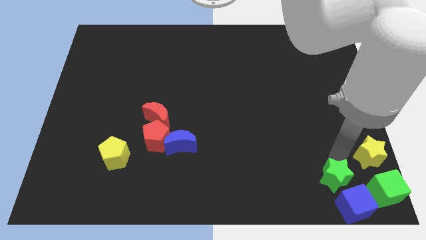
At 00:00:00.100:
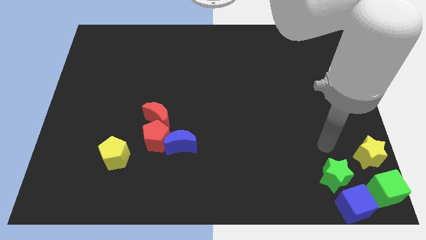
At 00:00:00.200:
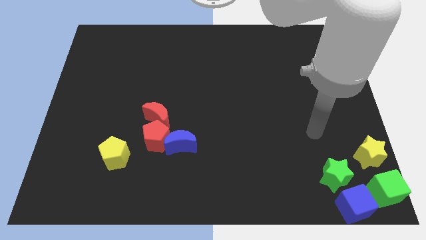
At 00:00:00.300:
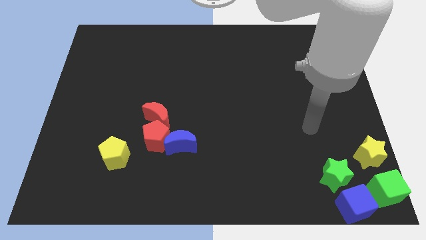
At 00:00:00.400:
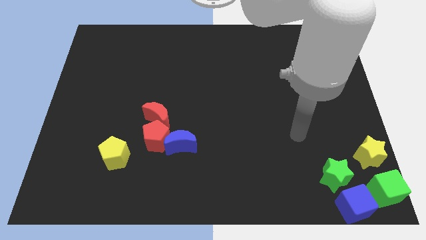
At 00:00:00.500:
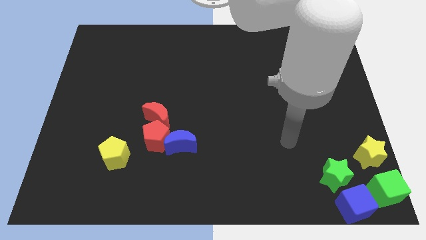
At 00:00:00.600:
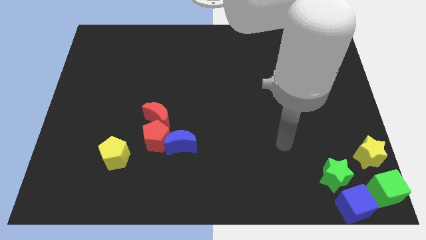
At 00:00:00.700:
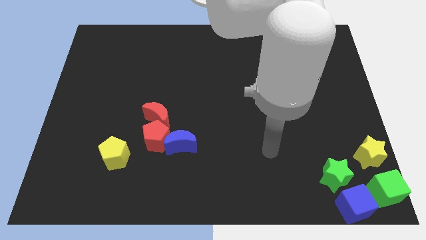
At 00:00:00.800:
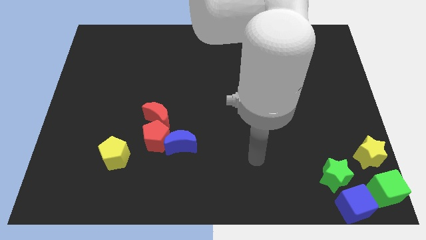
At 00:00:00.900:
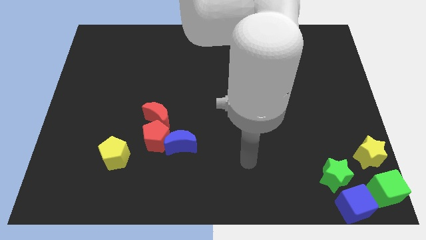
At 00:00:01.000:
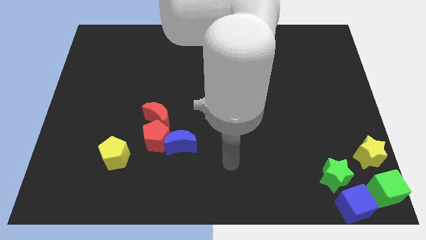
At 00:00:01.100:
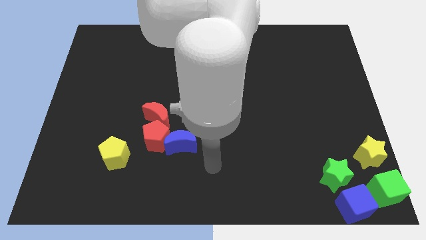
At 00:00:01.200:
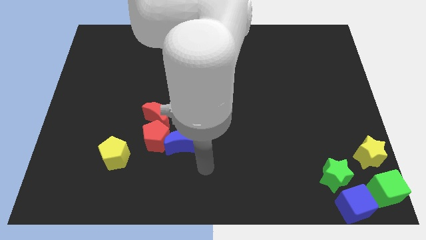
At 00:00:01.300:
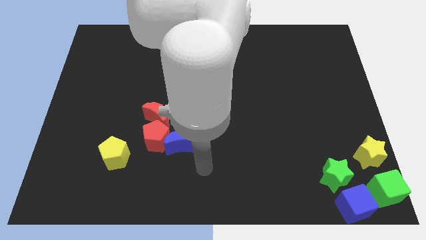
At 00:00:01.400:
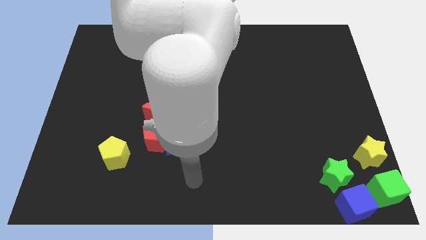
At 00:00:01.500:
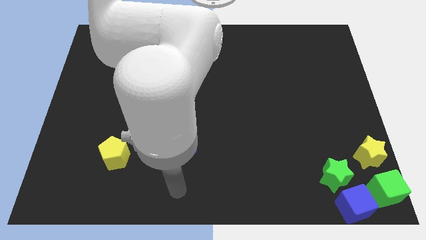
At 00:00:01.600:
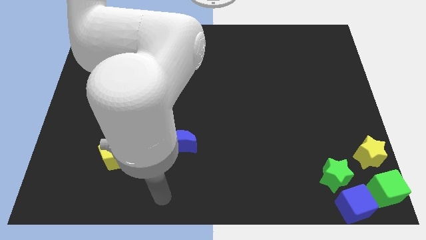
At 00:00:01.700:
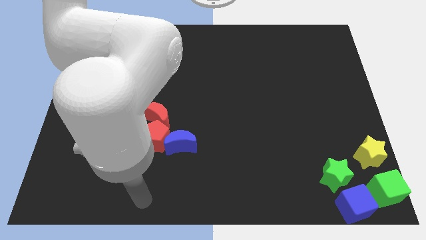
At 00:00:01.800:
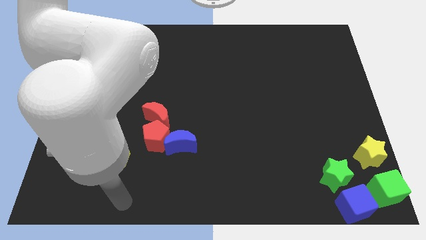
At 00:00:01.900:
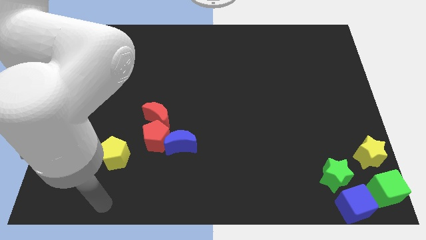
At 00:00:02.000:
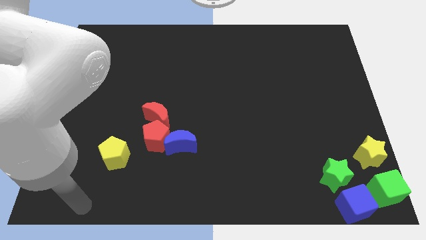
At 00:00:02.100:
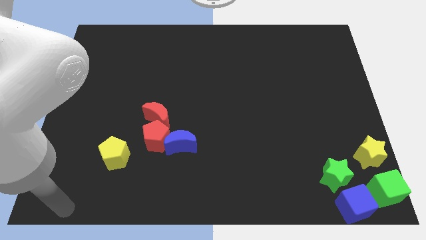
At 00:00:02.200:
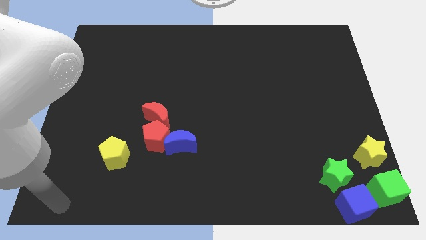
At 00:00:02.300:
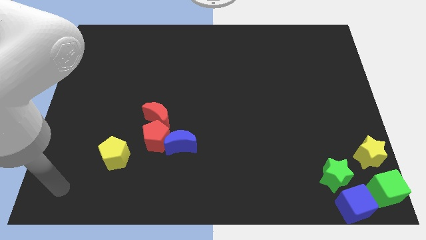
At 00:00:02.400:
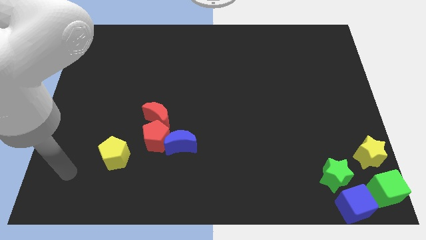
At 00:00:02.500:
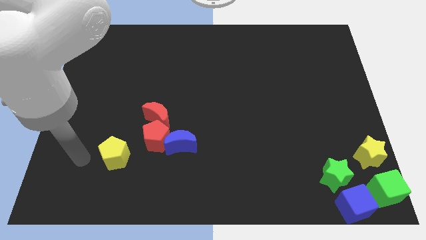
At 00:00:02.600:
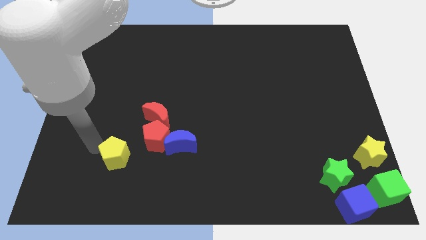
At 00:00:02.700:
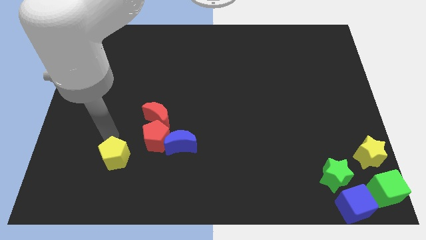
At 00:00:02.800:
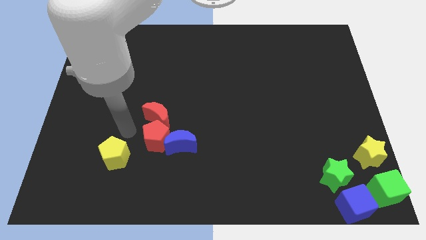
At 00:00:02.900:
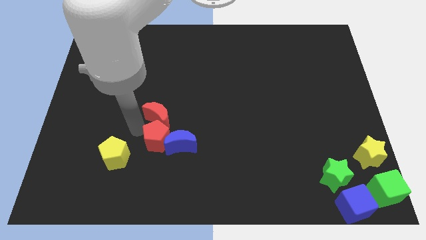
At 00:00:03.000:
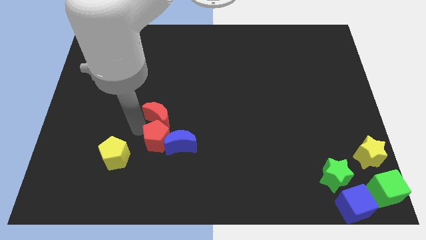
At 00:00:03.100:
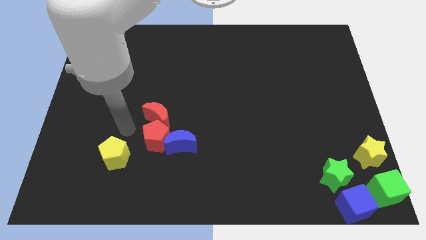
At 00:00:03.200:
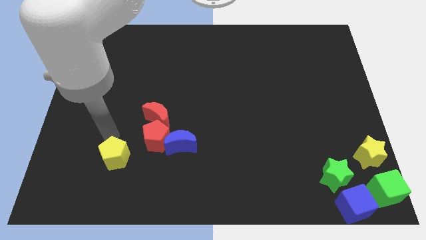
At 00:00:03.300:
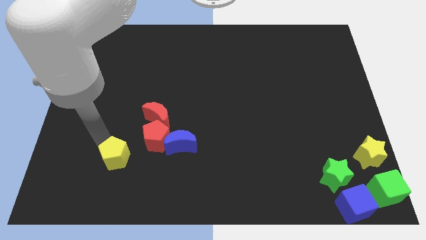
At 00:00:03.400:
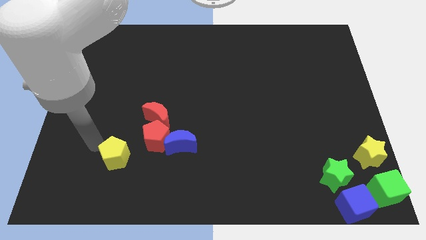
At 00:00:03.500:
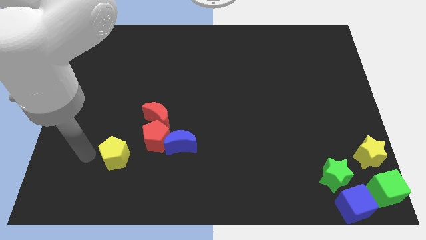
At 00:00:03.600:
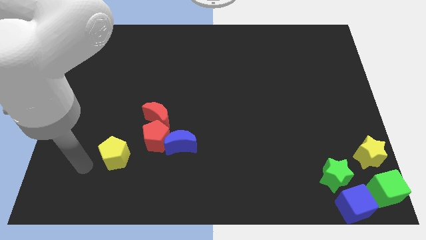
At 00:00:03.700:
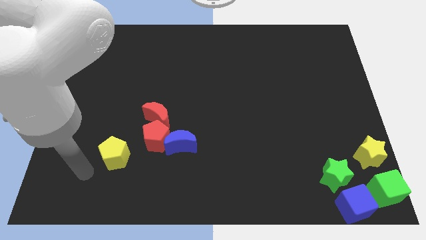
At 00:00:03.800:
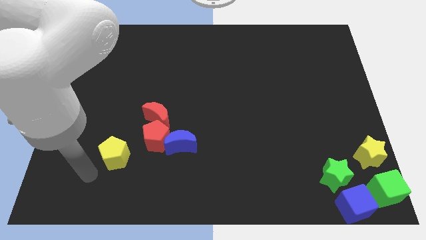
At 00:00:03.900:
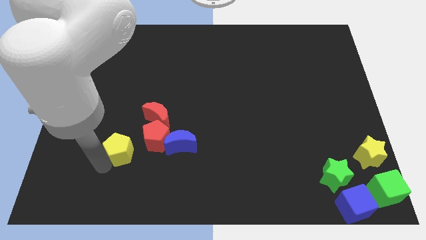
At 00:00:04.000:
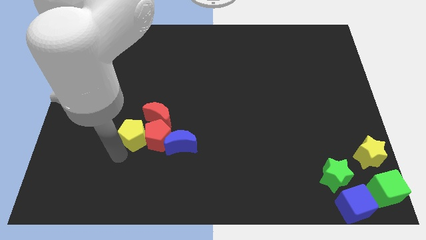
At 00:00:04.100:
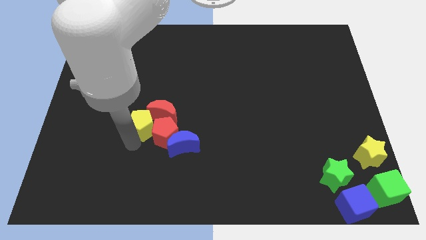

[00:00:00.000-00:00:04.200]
push the yellow pentagon into a red crescent

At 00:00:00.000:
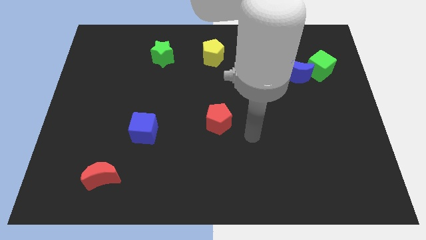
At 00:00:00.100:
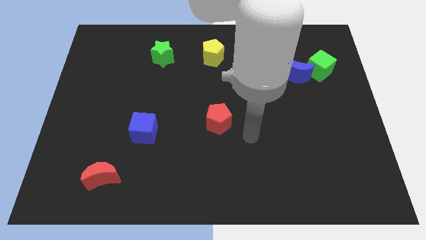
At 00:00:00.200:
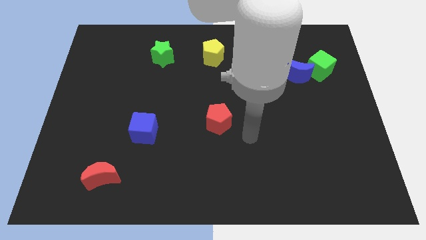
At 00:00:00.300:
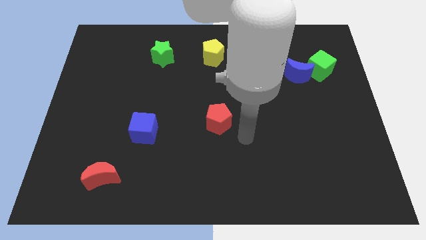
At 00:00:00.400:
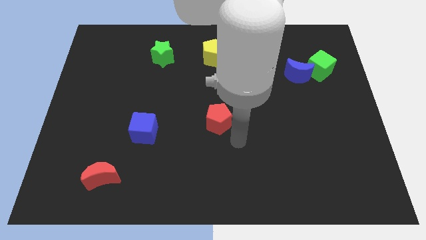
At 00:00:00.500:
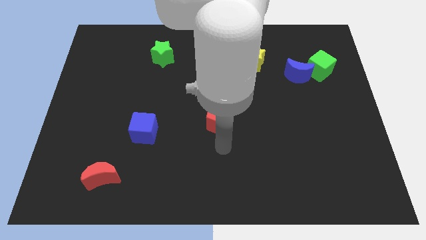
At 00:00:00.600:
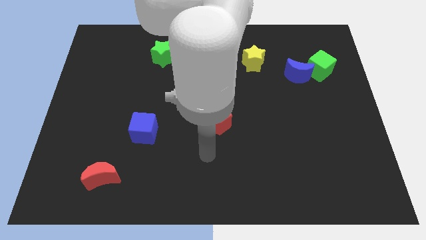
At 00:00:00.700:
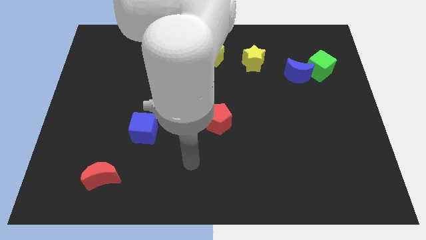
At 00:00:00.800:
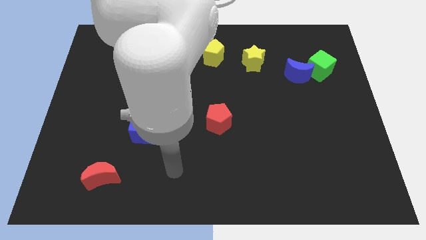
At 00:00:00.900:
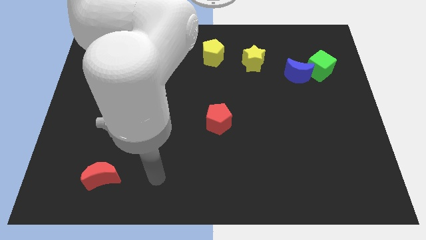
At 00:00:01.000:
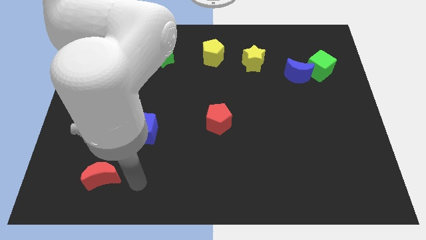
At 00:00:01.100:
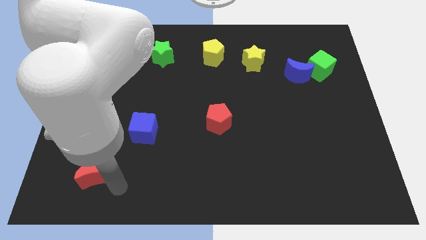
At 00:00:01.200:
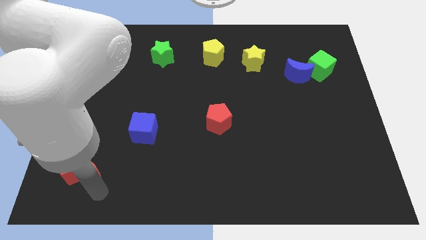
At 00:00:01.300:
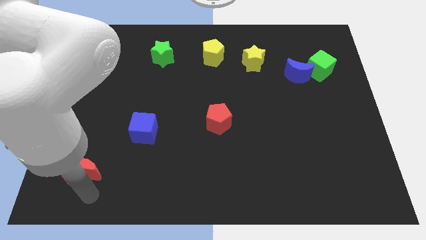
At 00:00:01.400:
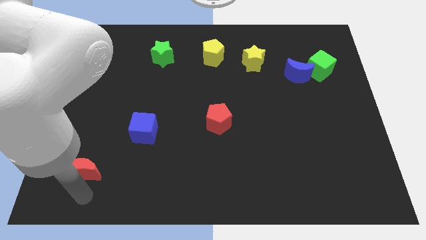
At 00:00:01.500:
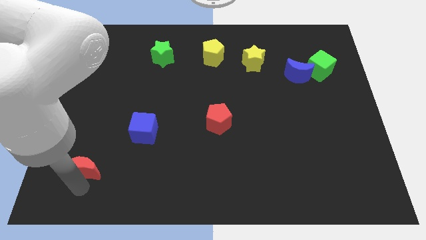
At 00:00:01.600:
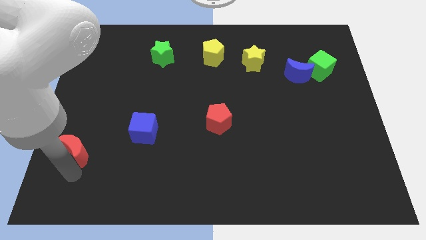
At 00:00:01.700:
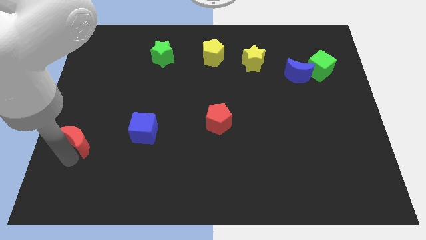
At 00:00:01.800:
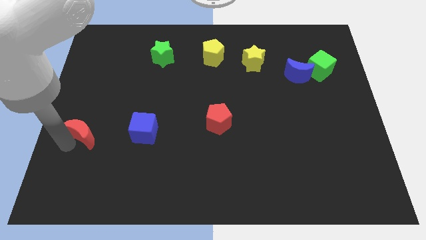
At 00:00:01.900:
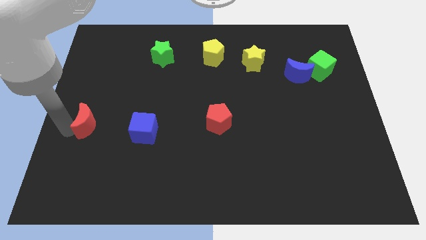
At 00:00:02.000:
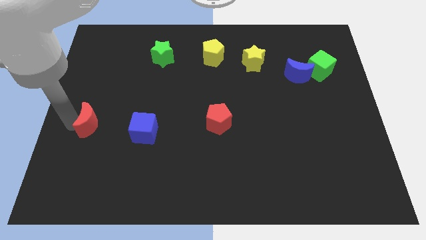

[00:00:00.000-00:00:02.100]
push the red crescent towards the center left of the board

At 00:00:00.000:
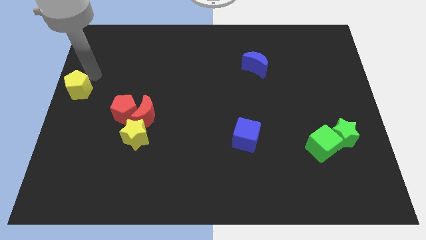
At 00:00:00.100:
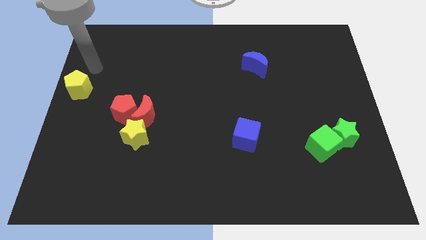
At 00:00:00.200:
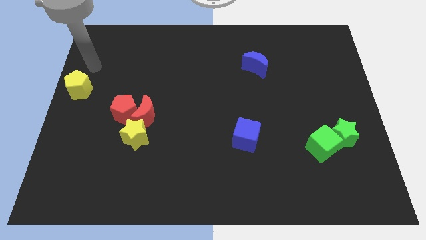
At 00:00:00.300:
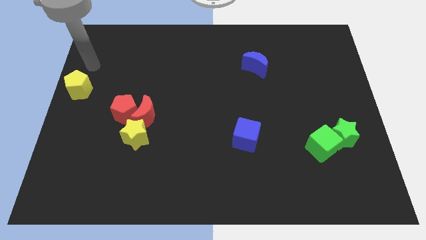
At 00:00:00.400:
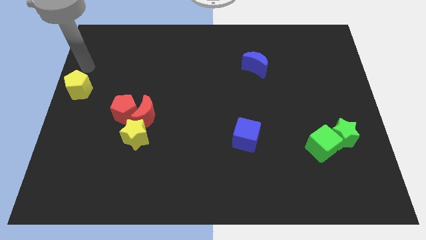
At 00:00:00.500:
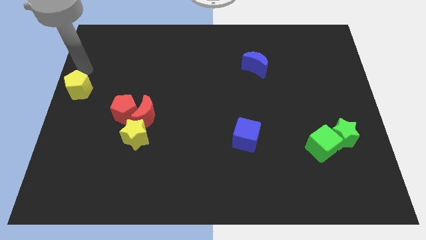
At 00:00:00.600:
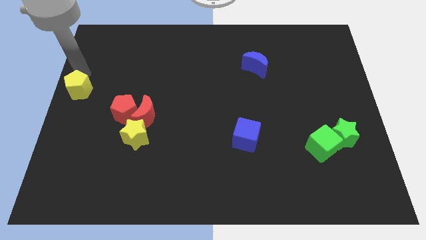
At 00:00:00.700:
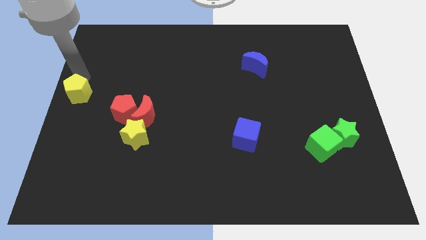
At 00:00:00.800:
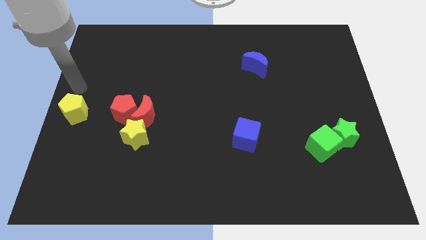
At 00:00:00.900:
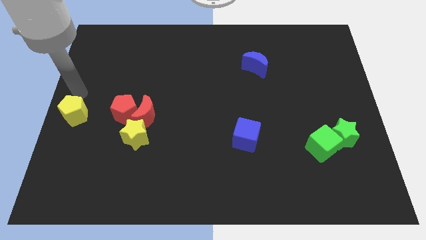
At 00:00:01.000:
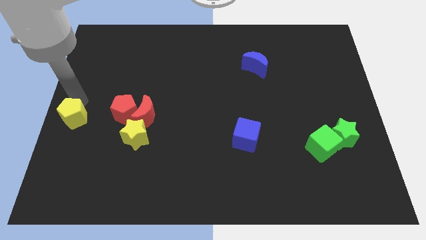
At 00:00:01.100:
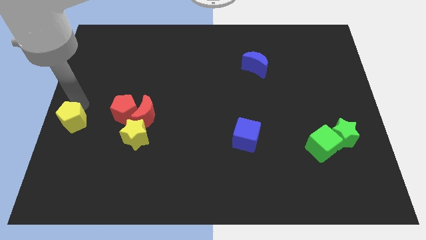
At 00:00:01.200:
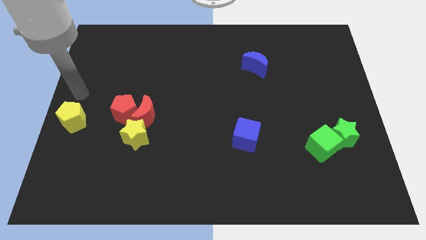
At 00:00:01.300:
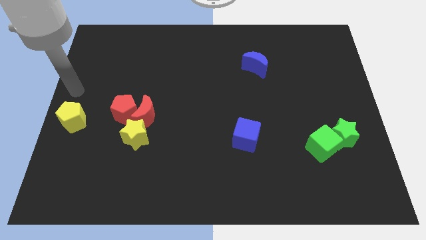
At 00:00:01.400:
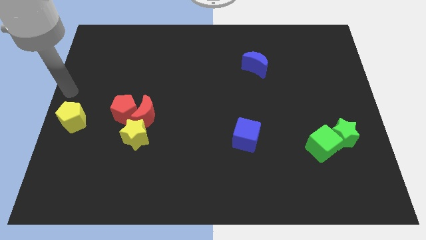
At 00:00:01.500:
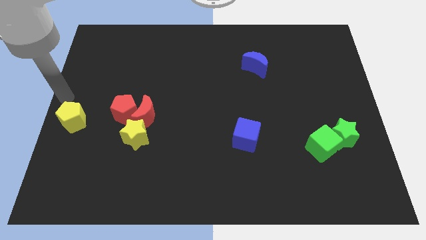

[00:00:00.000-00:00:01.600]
move the yellow pentagon to left side of the yellow star

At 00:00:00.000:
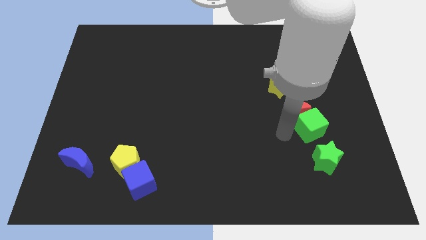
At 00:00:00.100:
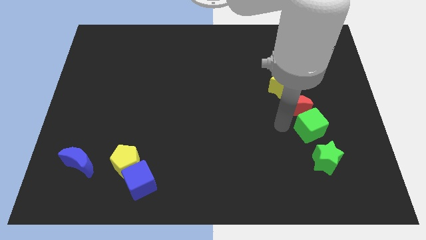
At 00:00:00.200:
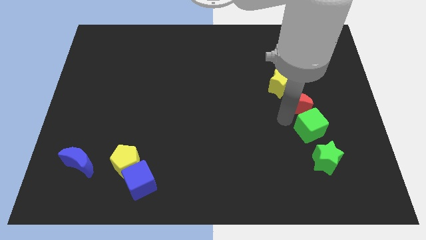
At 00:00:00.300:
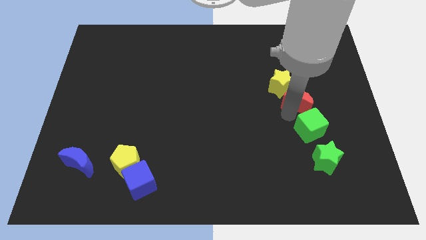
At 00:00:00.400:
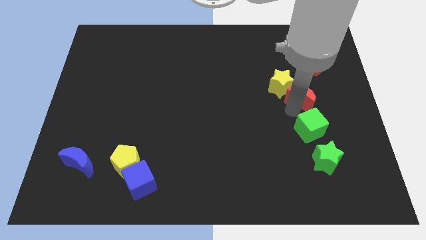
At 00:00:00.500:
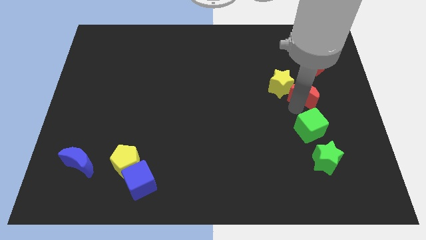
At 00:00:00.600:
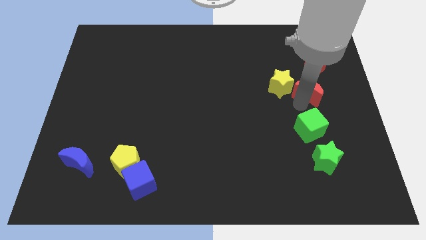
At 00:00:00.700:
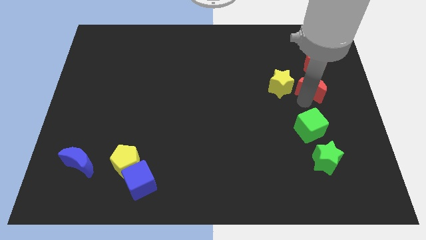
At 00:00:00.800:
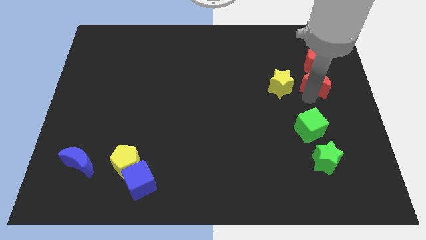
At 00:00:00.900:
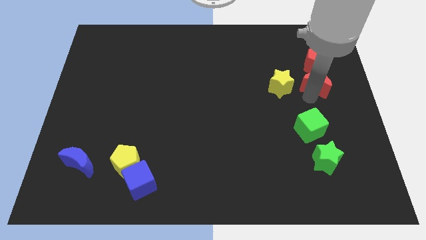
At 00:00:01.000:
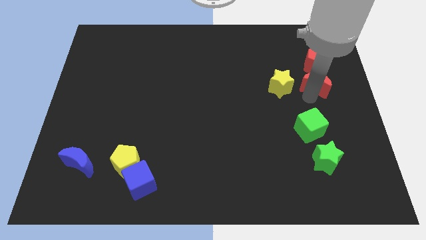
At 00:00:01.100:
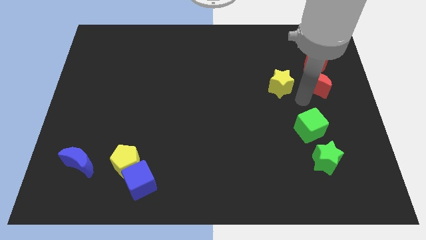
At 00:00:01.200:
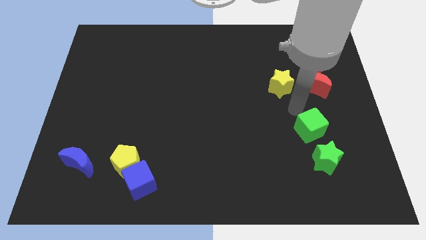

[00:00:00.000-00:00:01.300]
move the red moon right to the yellow star
